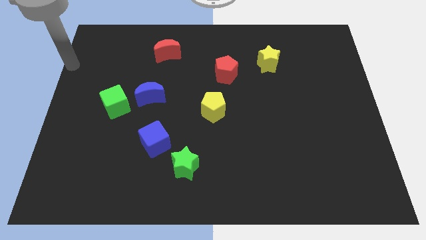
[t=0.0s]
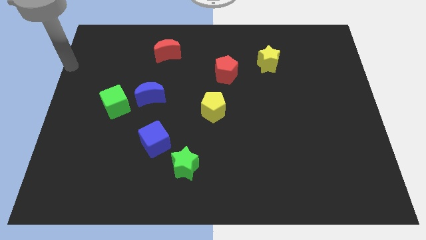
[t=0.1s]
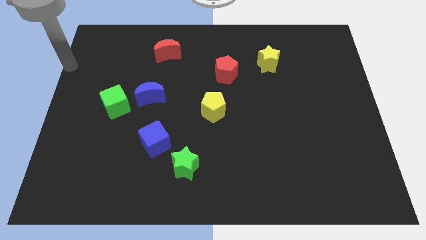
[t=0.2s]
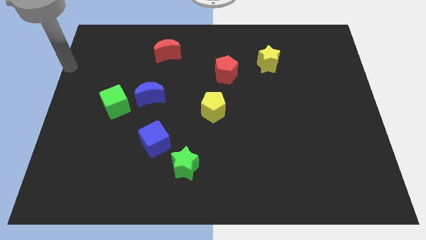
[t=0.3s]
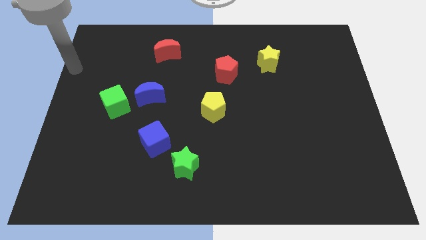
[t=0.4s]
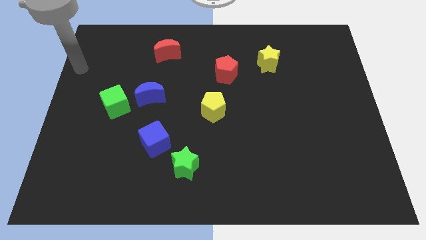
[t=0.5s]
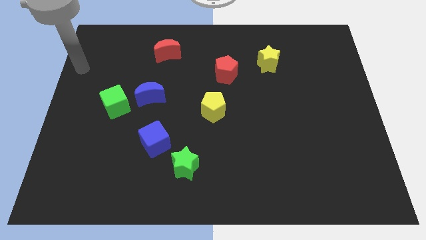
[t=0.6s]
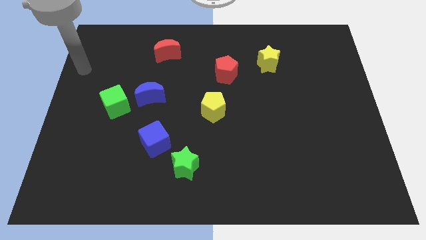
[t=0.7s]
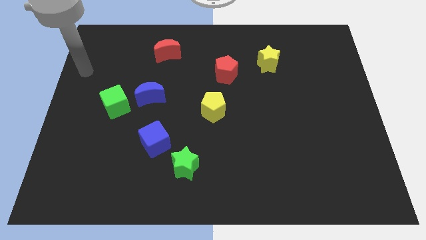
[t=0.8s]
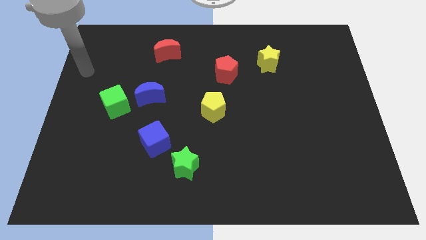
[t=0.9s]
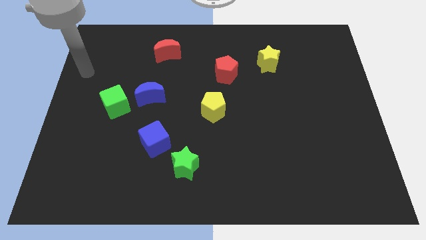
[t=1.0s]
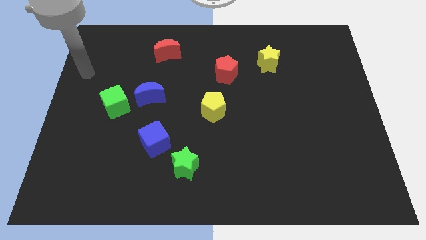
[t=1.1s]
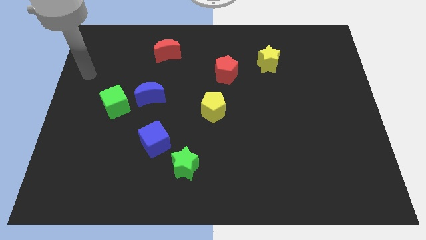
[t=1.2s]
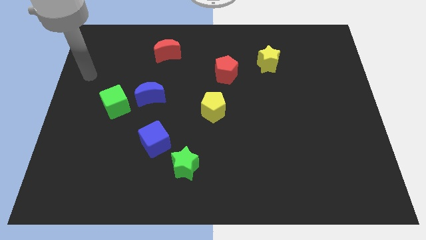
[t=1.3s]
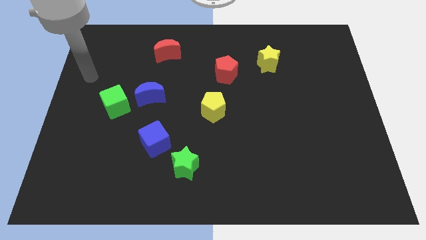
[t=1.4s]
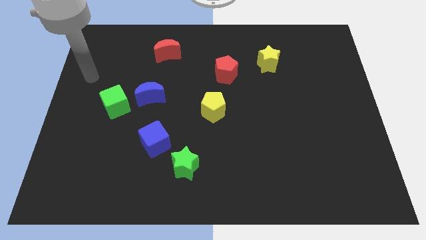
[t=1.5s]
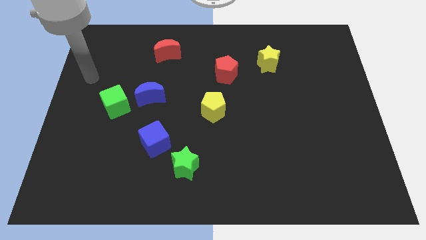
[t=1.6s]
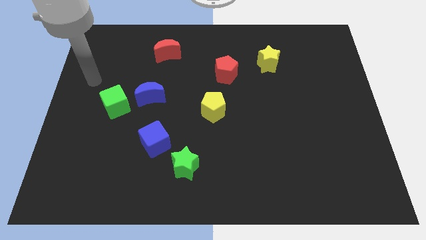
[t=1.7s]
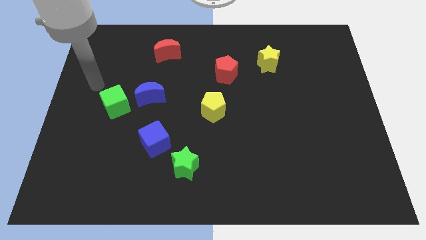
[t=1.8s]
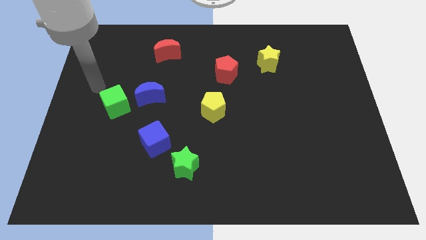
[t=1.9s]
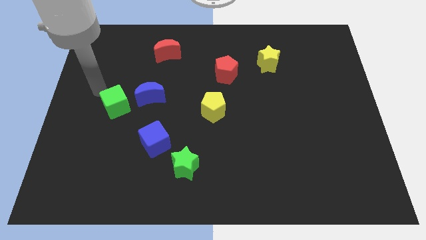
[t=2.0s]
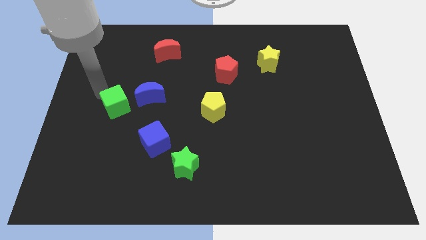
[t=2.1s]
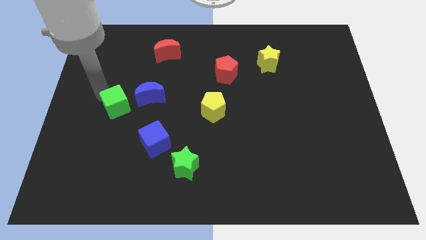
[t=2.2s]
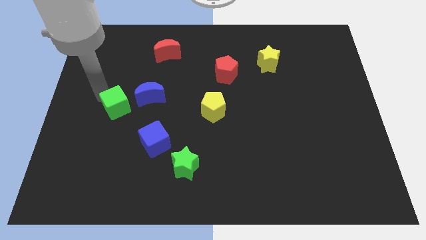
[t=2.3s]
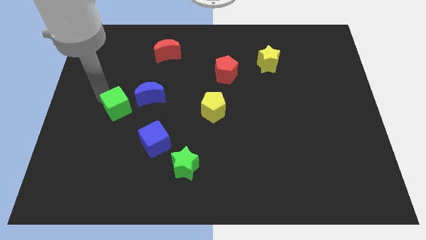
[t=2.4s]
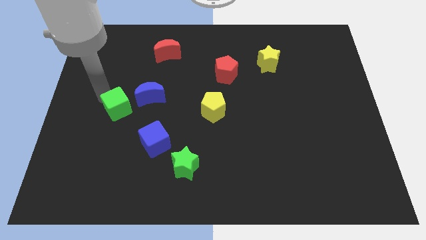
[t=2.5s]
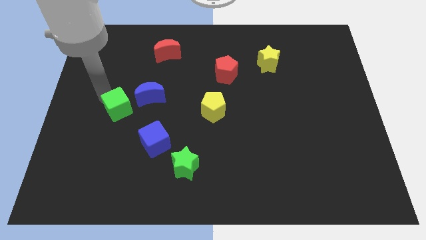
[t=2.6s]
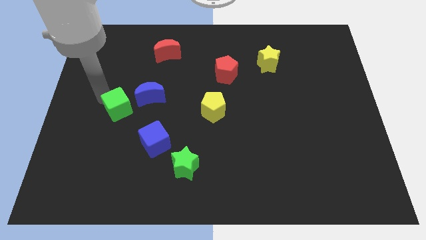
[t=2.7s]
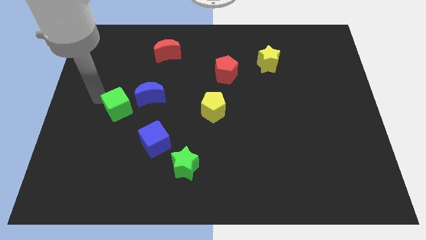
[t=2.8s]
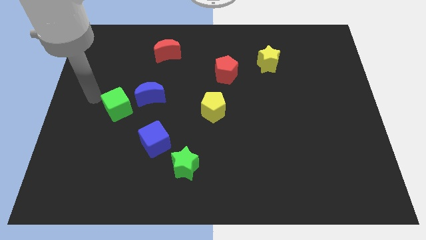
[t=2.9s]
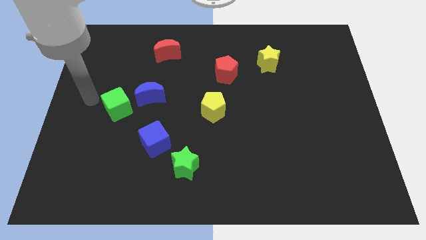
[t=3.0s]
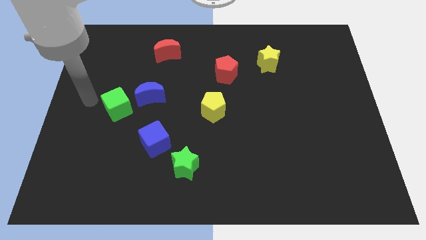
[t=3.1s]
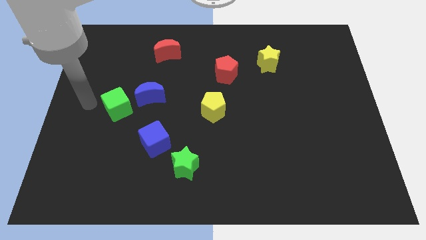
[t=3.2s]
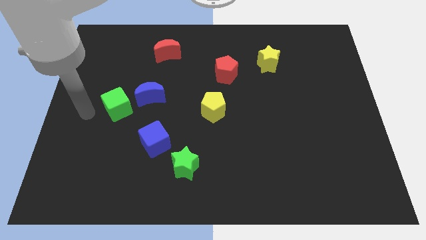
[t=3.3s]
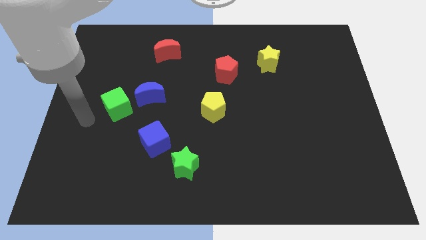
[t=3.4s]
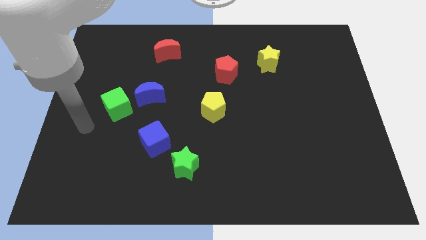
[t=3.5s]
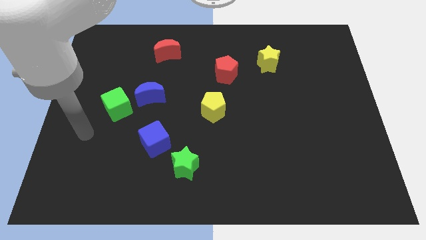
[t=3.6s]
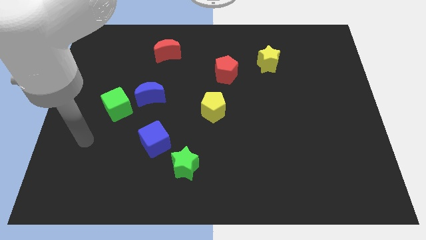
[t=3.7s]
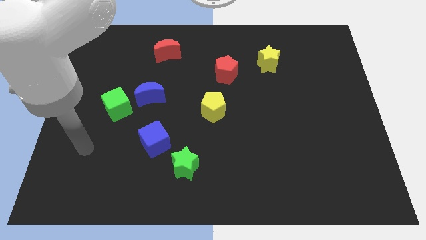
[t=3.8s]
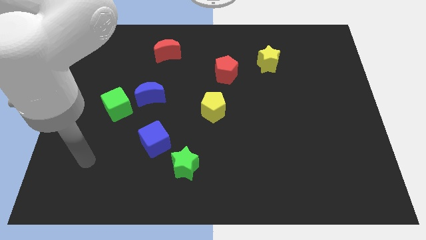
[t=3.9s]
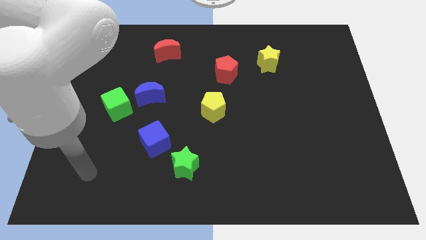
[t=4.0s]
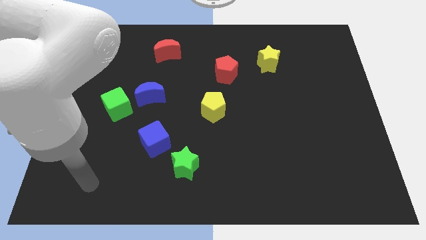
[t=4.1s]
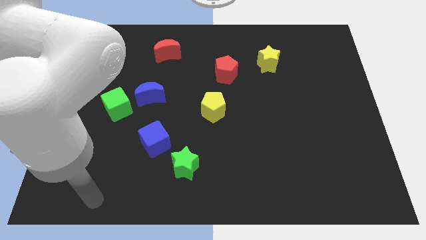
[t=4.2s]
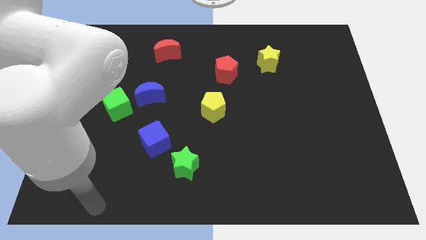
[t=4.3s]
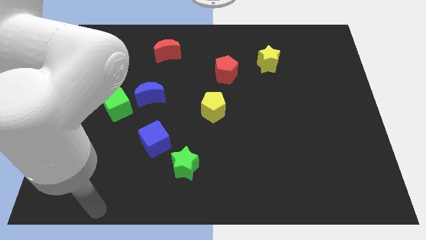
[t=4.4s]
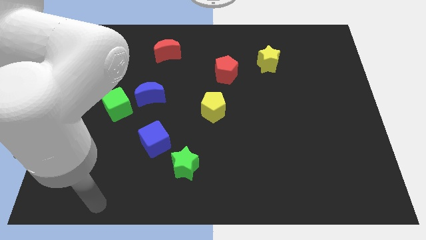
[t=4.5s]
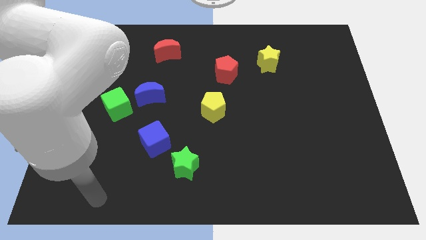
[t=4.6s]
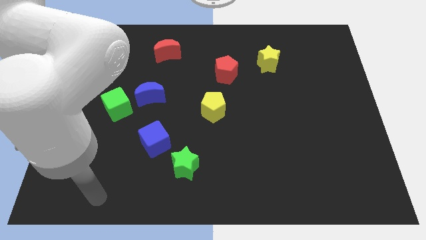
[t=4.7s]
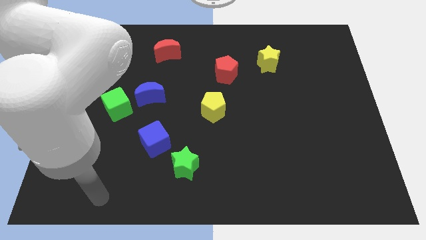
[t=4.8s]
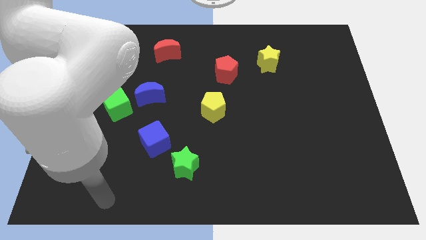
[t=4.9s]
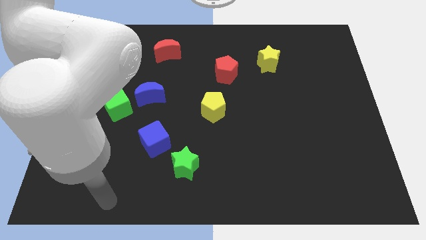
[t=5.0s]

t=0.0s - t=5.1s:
move the green cube slightly to the downwards

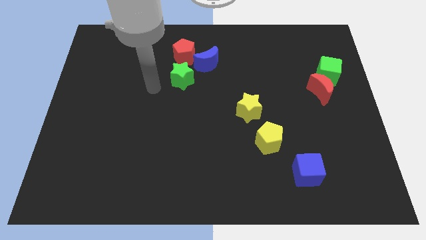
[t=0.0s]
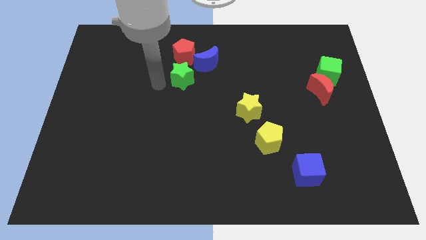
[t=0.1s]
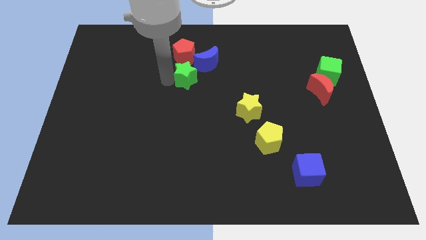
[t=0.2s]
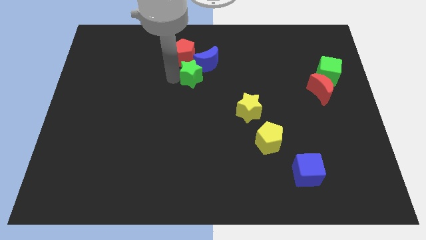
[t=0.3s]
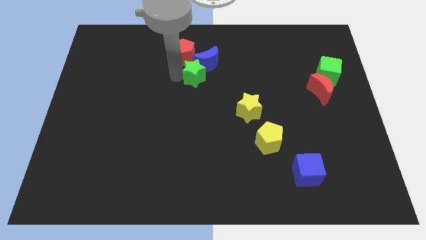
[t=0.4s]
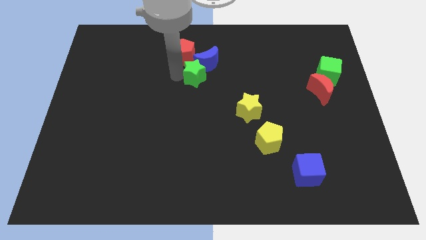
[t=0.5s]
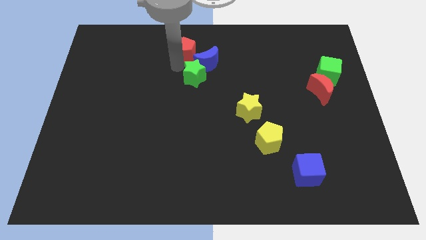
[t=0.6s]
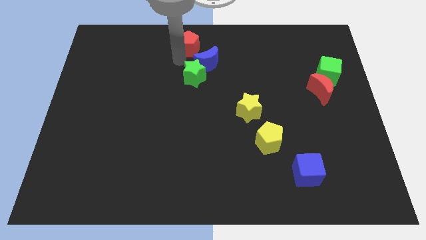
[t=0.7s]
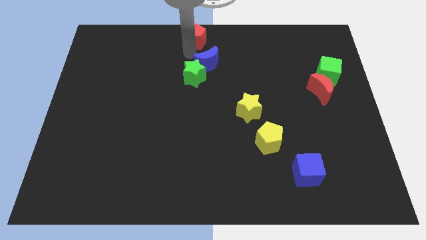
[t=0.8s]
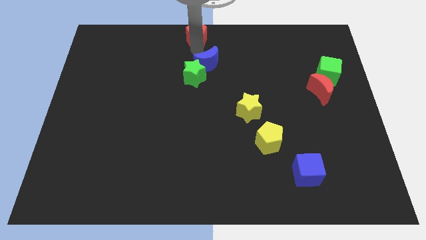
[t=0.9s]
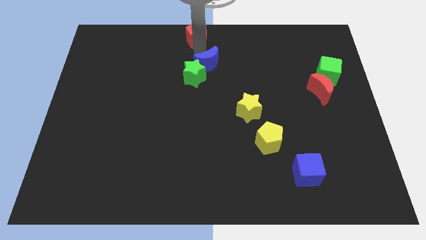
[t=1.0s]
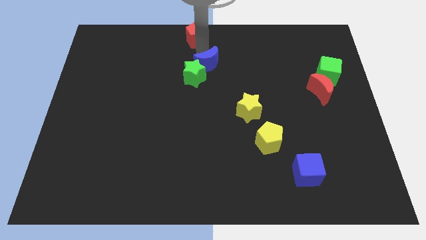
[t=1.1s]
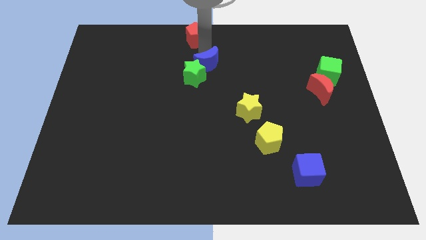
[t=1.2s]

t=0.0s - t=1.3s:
separate the red pentagon from the blocks

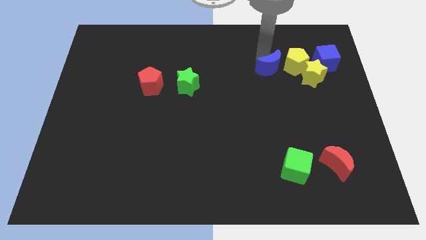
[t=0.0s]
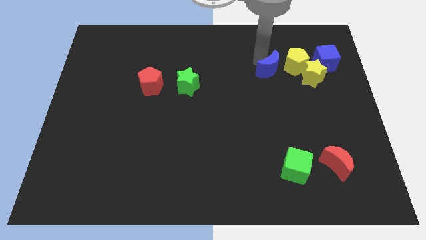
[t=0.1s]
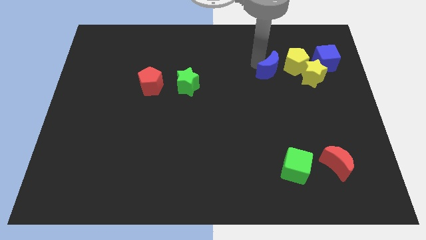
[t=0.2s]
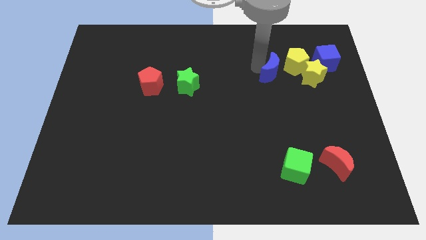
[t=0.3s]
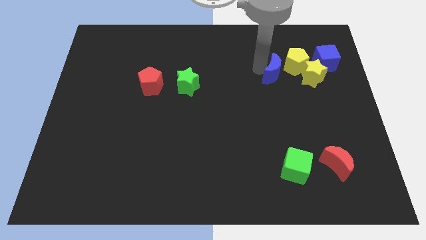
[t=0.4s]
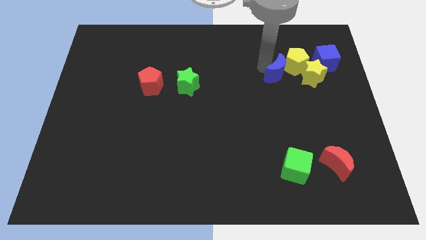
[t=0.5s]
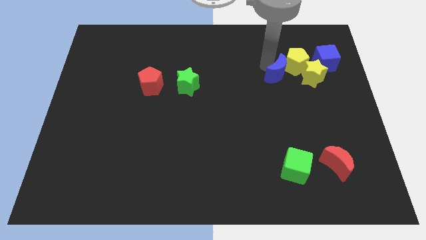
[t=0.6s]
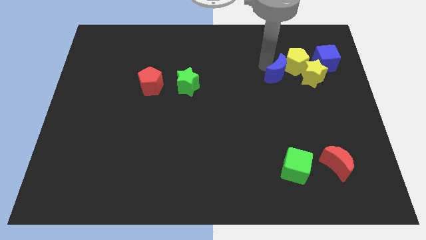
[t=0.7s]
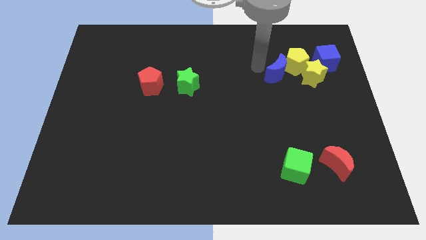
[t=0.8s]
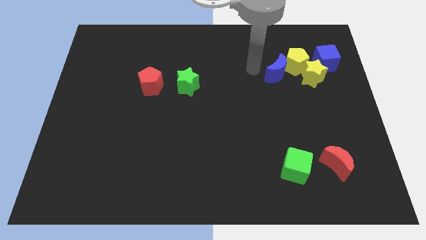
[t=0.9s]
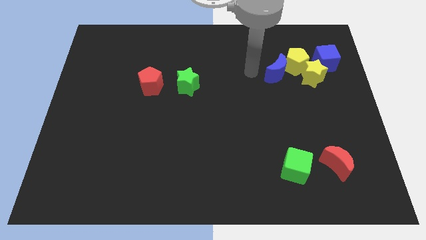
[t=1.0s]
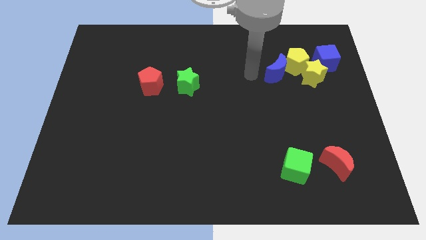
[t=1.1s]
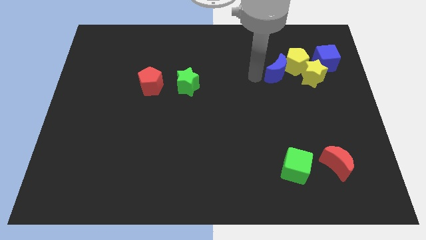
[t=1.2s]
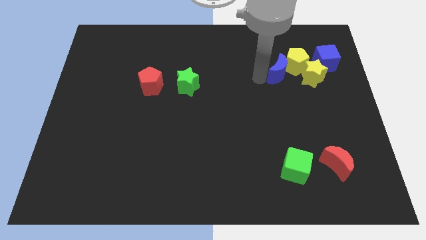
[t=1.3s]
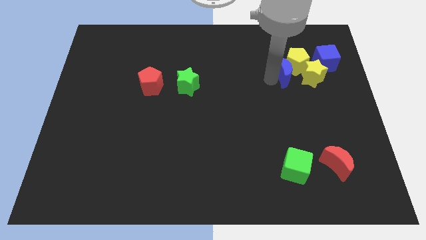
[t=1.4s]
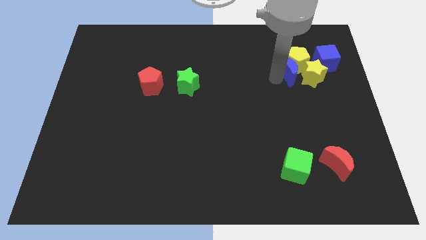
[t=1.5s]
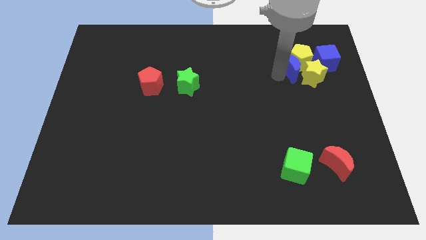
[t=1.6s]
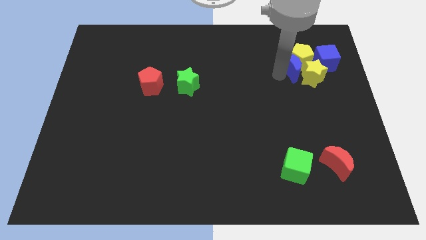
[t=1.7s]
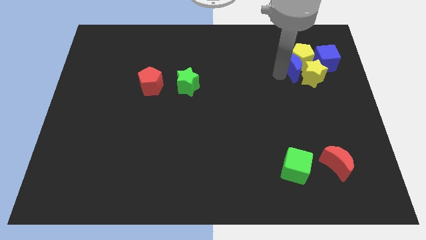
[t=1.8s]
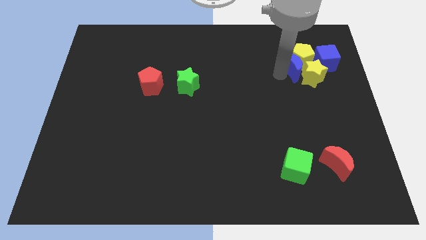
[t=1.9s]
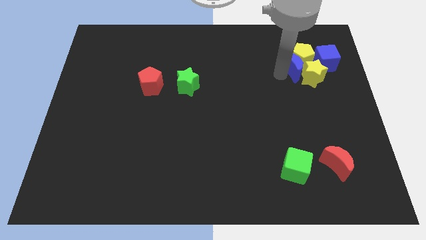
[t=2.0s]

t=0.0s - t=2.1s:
push the blue crescent into the yellow pentagon

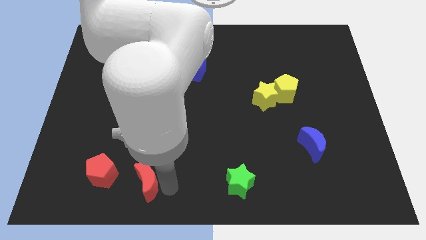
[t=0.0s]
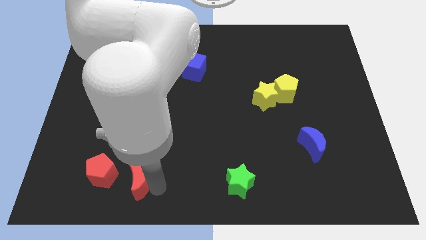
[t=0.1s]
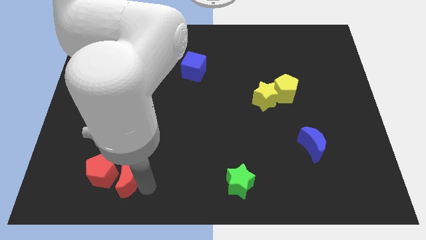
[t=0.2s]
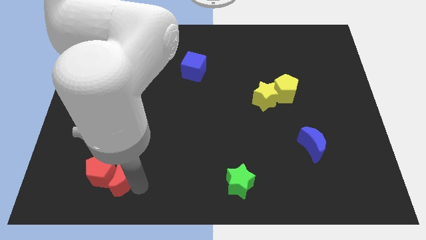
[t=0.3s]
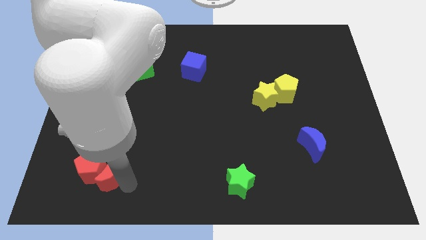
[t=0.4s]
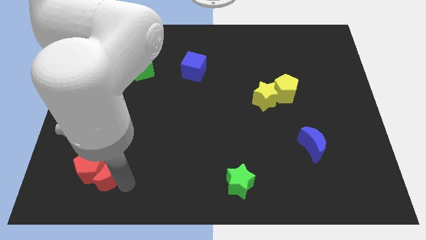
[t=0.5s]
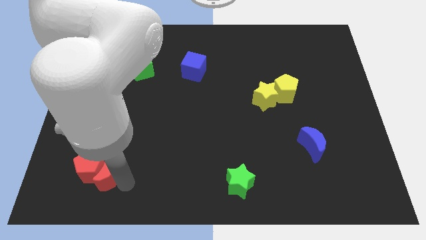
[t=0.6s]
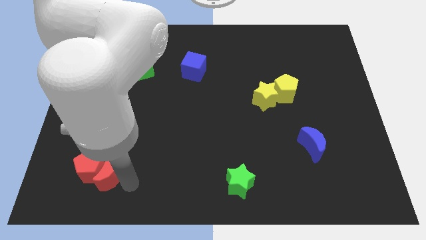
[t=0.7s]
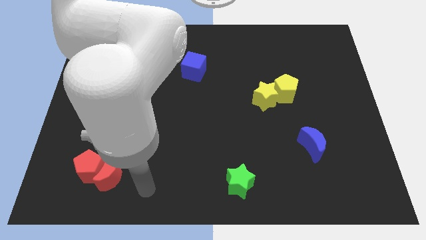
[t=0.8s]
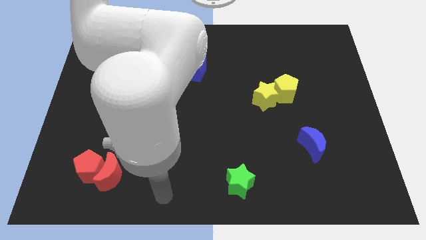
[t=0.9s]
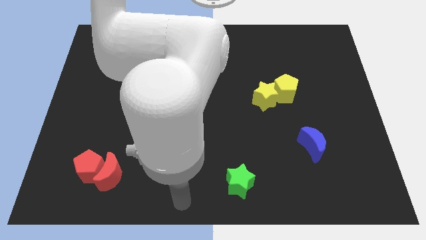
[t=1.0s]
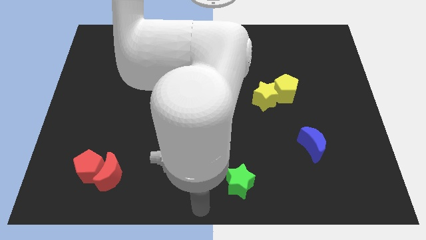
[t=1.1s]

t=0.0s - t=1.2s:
move the red moon to the right of the red pentagon
